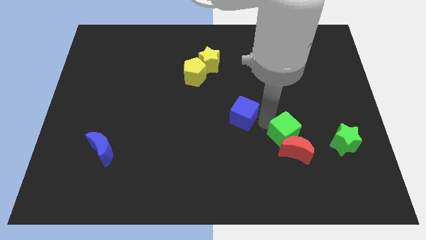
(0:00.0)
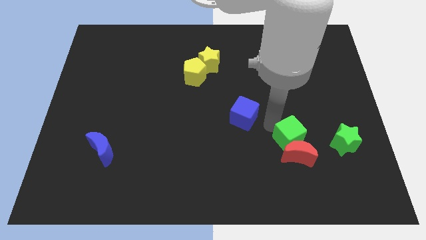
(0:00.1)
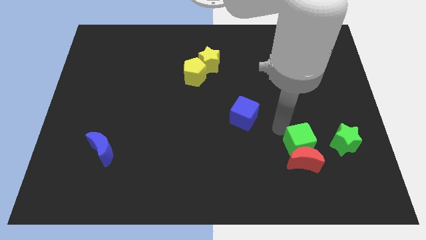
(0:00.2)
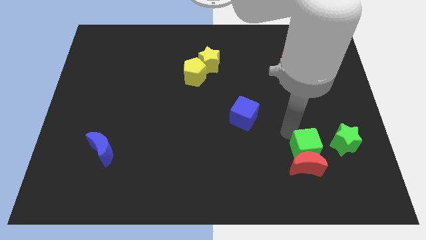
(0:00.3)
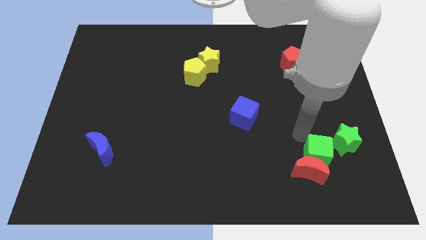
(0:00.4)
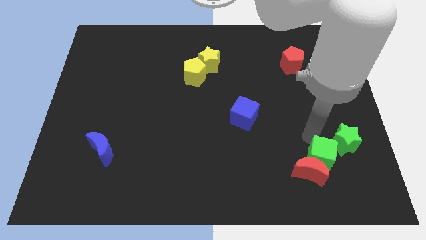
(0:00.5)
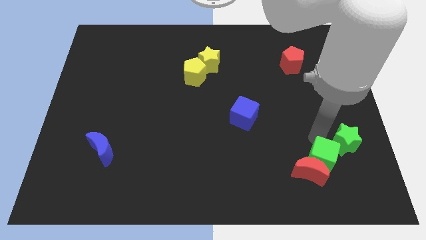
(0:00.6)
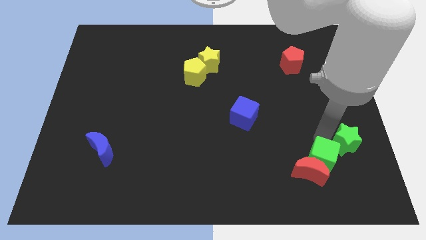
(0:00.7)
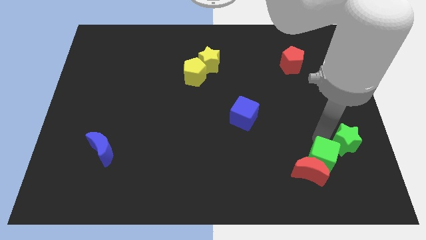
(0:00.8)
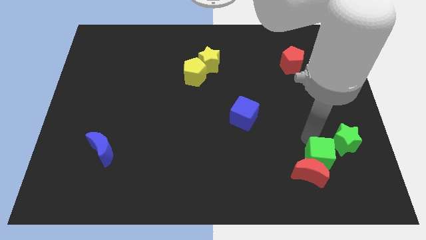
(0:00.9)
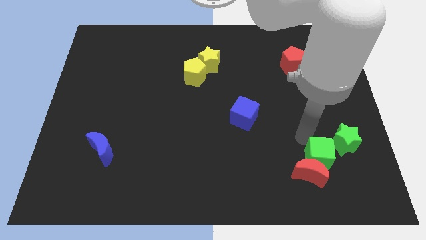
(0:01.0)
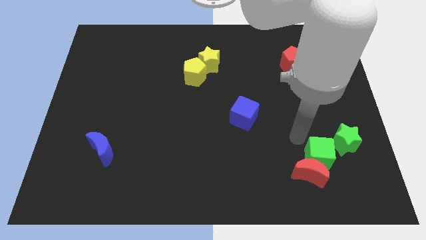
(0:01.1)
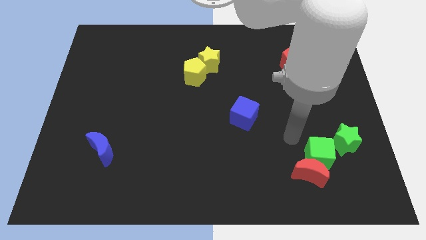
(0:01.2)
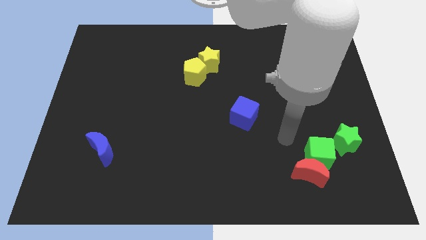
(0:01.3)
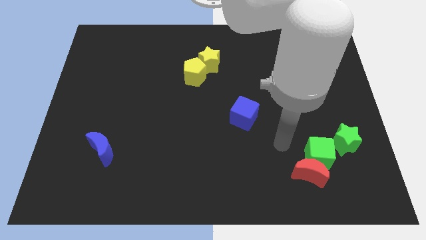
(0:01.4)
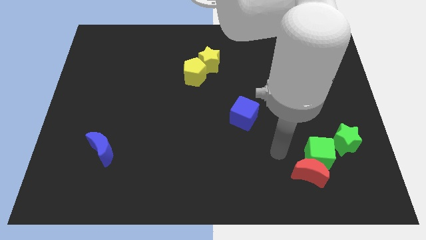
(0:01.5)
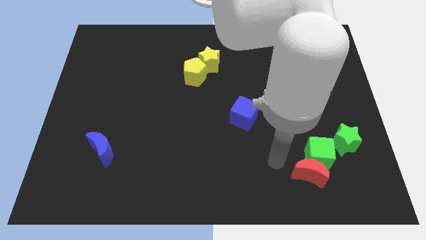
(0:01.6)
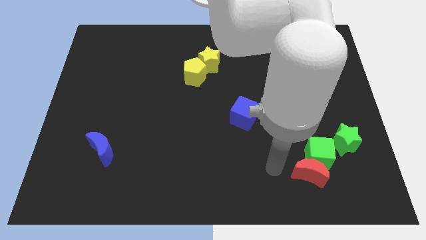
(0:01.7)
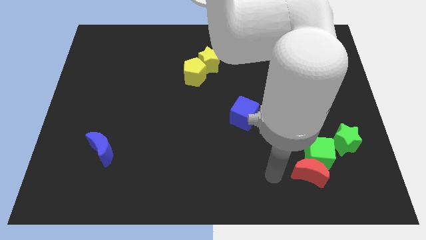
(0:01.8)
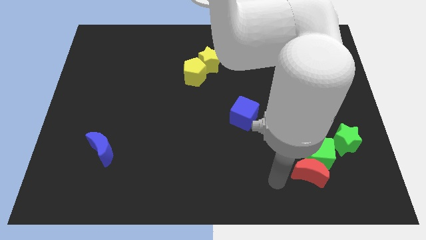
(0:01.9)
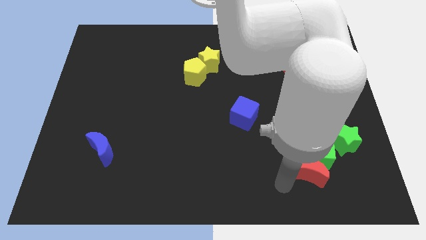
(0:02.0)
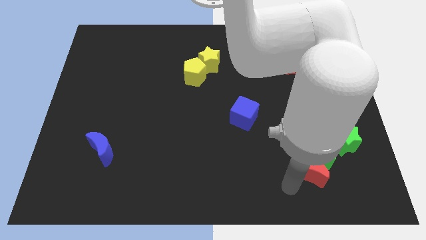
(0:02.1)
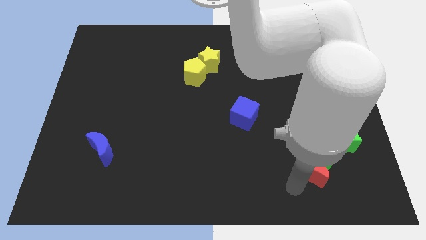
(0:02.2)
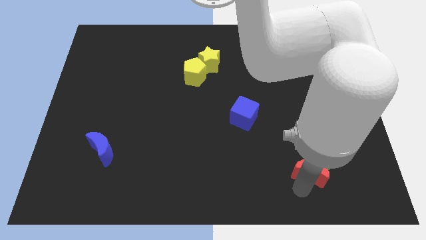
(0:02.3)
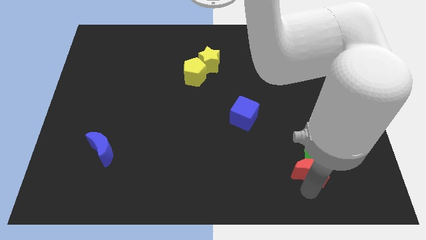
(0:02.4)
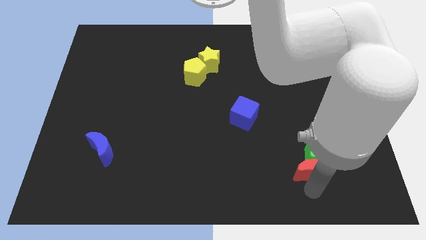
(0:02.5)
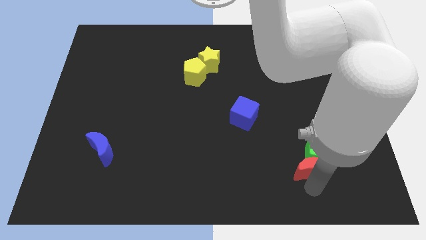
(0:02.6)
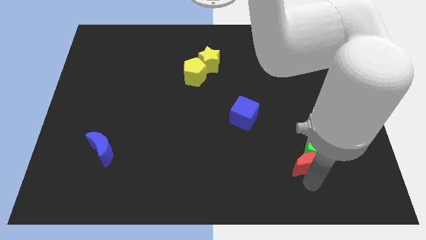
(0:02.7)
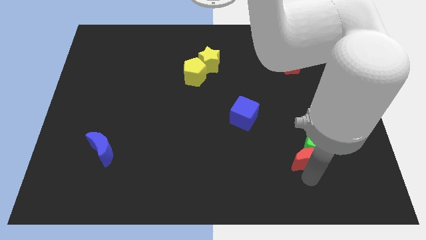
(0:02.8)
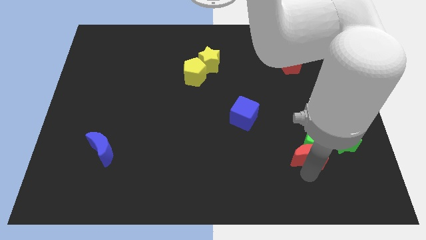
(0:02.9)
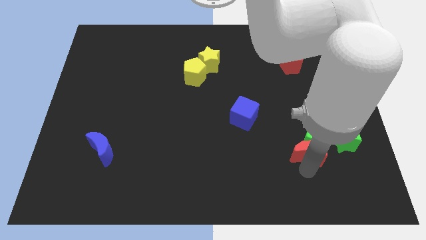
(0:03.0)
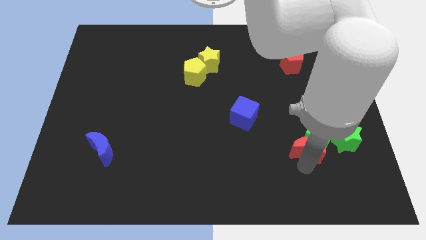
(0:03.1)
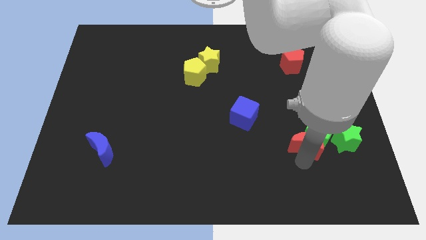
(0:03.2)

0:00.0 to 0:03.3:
put the green cube along with the red moon left to the green star

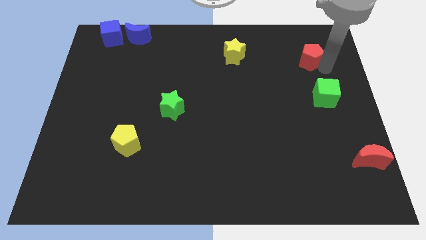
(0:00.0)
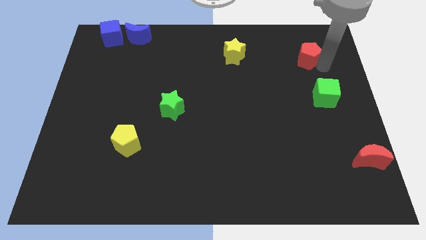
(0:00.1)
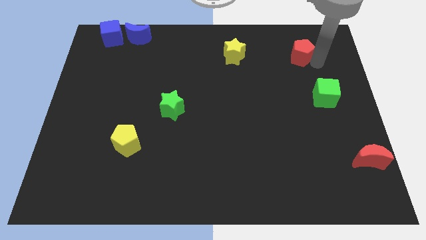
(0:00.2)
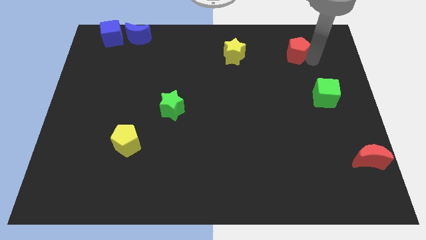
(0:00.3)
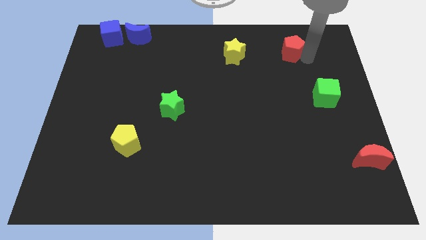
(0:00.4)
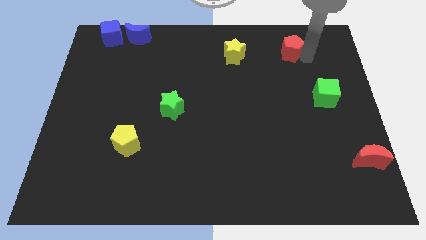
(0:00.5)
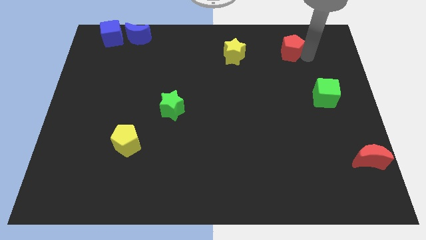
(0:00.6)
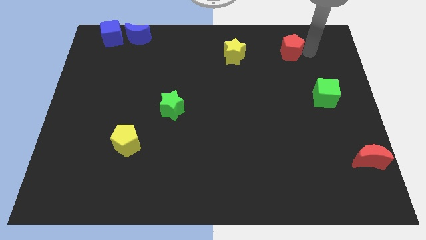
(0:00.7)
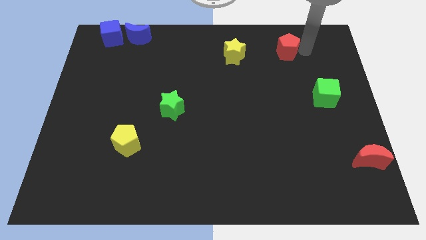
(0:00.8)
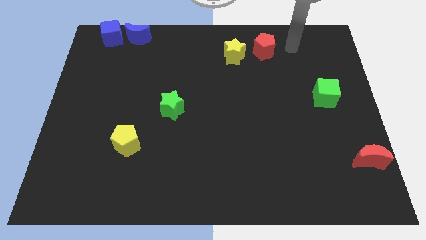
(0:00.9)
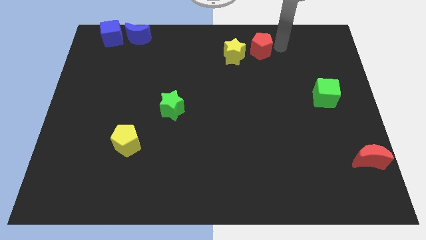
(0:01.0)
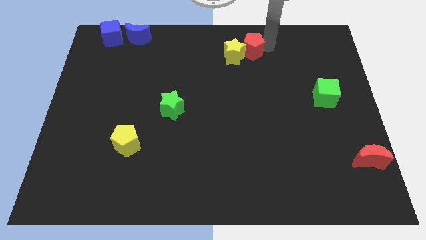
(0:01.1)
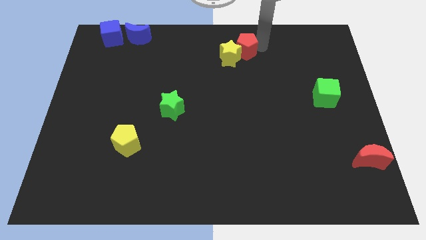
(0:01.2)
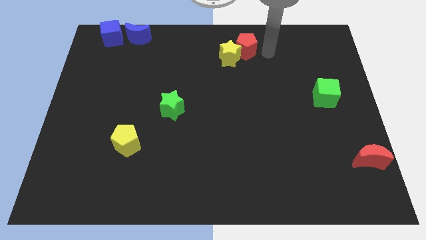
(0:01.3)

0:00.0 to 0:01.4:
place red pentagon above the yellow star

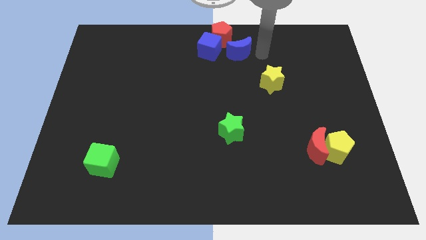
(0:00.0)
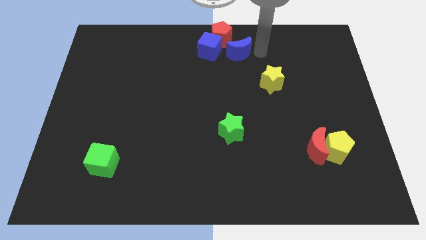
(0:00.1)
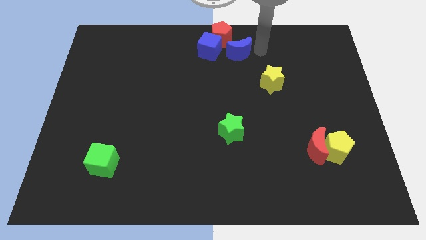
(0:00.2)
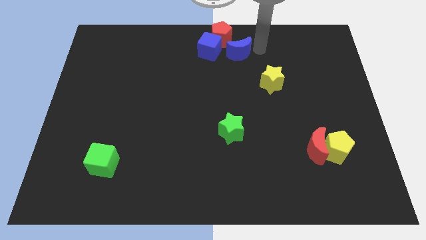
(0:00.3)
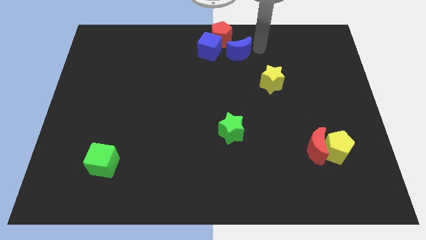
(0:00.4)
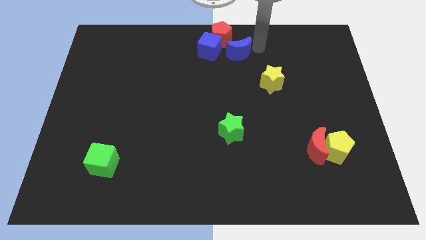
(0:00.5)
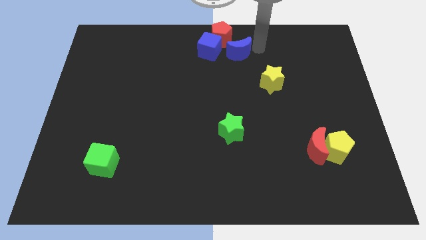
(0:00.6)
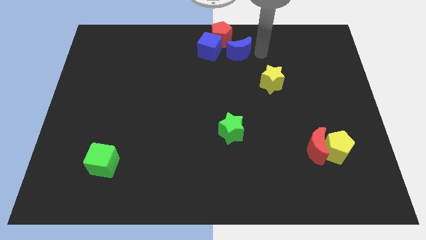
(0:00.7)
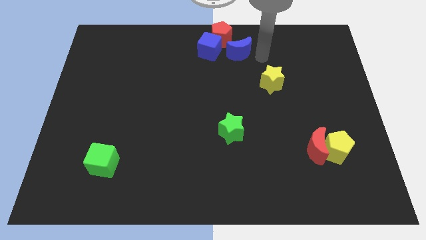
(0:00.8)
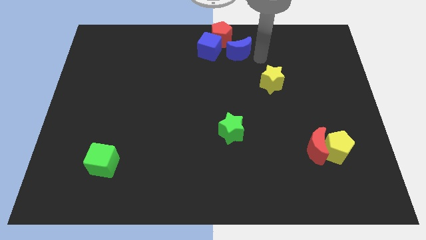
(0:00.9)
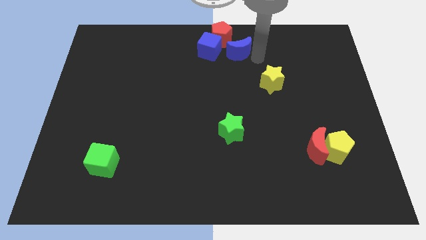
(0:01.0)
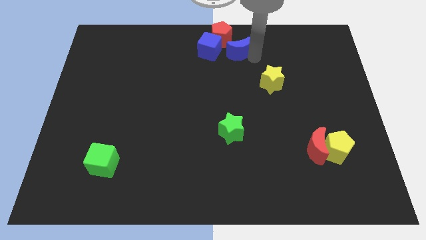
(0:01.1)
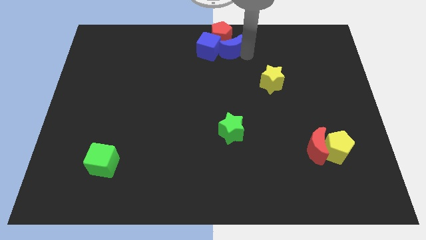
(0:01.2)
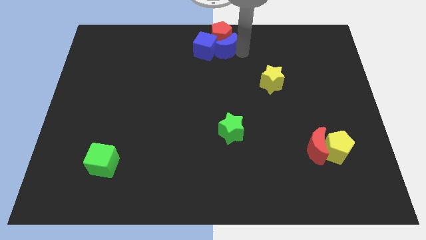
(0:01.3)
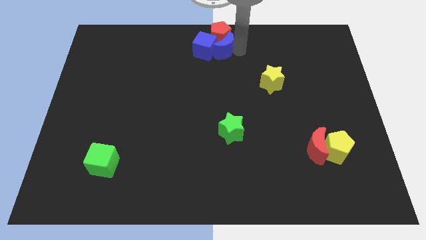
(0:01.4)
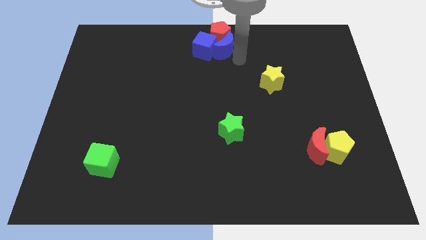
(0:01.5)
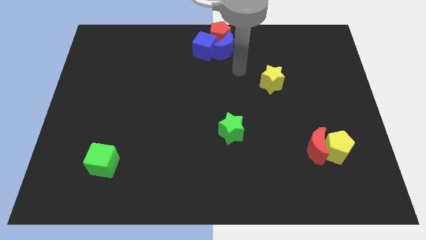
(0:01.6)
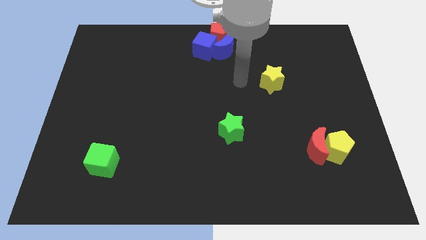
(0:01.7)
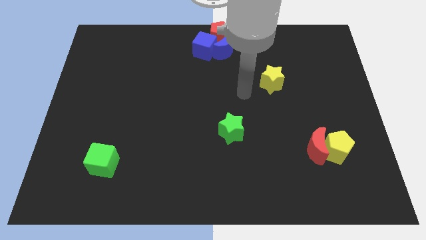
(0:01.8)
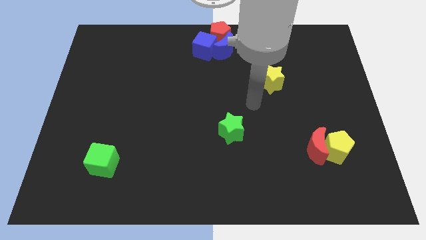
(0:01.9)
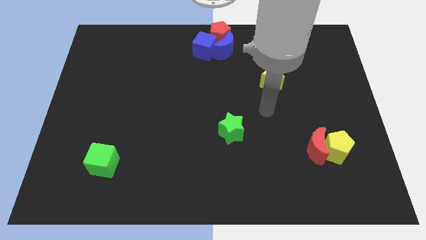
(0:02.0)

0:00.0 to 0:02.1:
add blue moon into blue cube and red pentagon

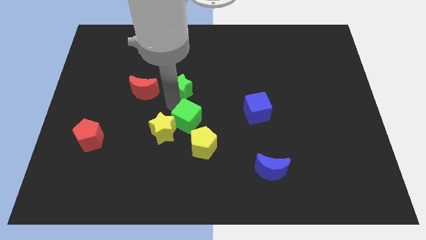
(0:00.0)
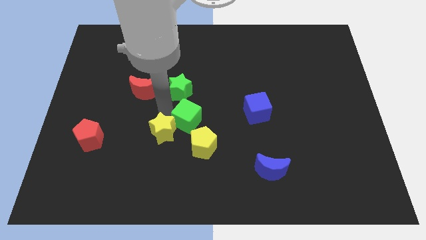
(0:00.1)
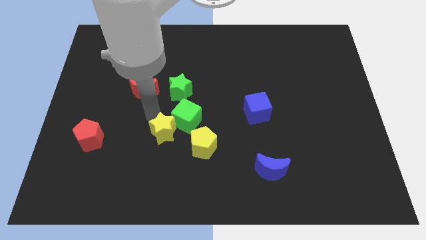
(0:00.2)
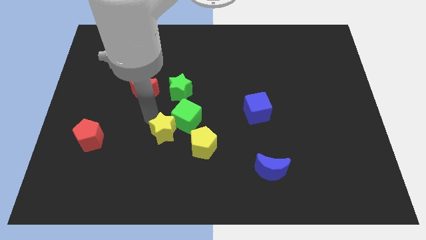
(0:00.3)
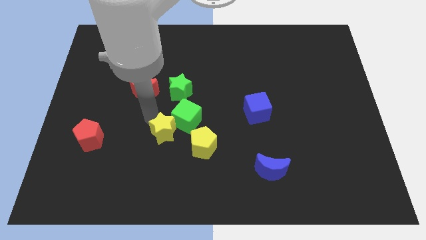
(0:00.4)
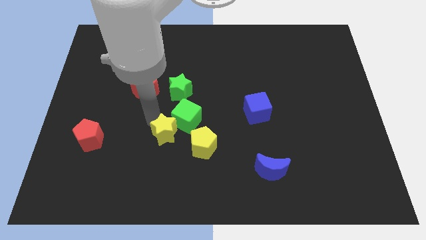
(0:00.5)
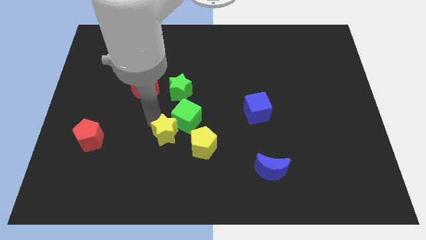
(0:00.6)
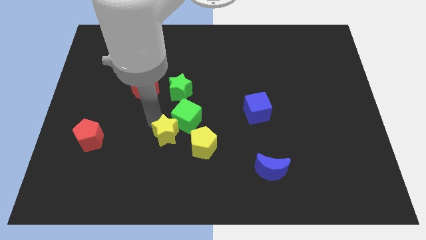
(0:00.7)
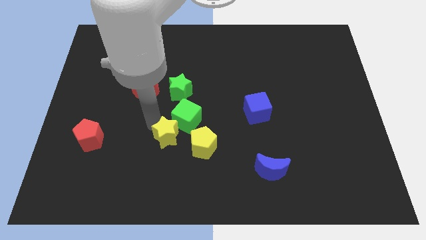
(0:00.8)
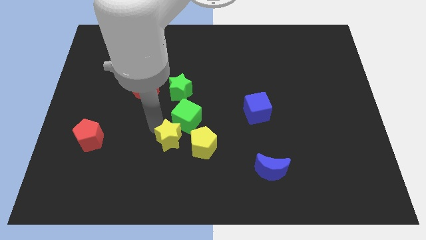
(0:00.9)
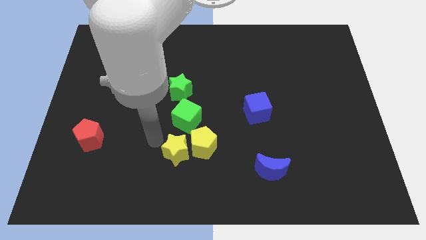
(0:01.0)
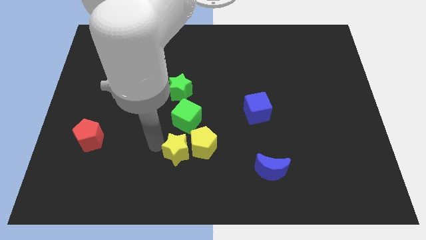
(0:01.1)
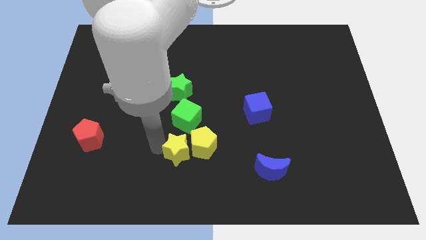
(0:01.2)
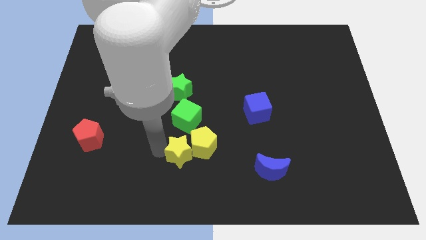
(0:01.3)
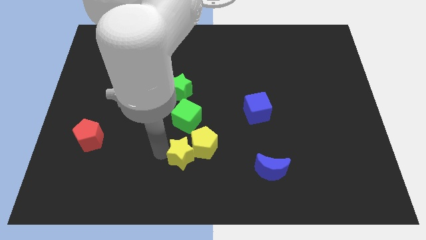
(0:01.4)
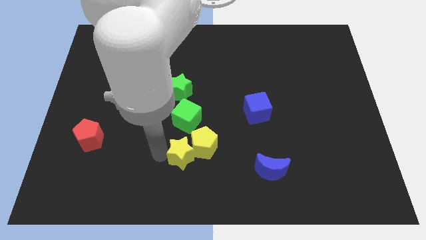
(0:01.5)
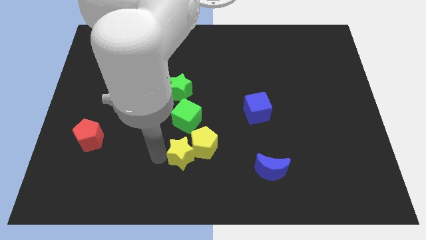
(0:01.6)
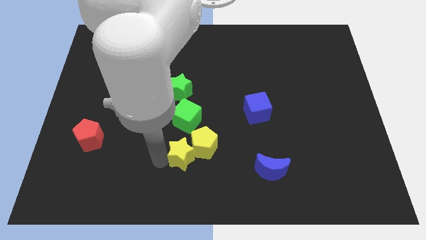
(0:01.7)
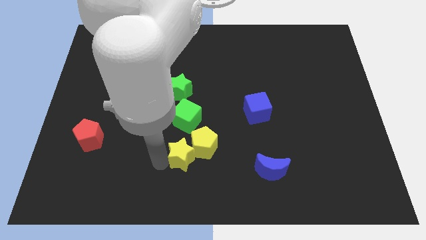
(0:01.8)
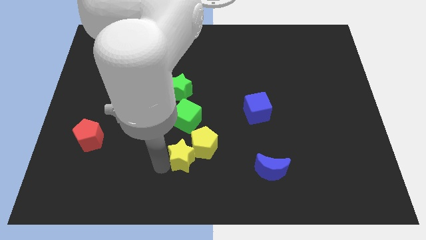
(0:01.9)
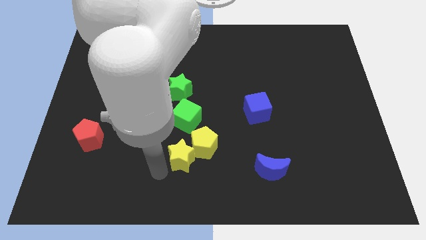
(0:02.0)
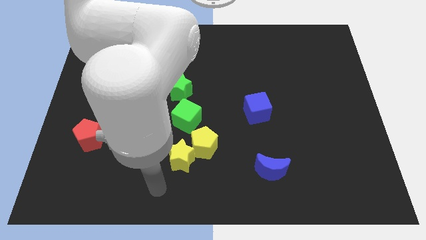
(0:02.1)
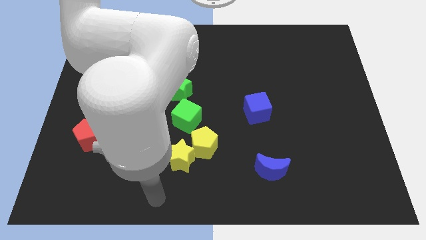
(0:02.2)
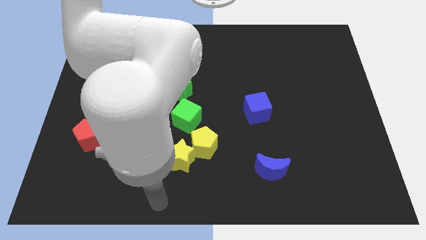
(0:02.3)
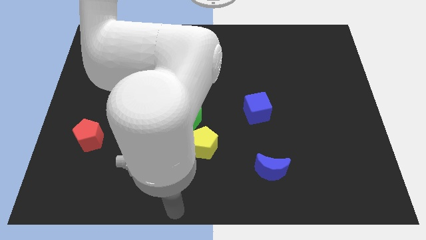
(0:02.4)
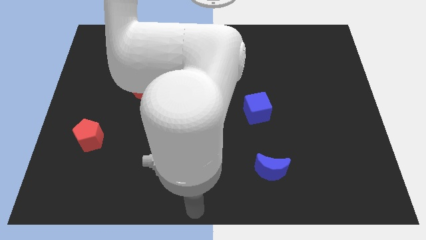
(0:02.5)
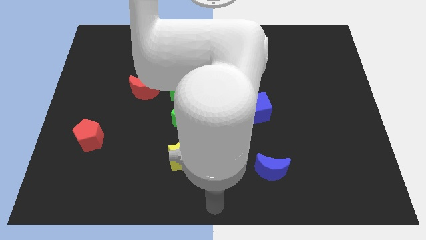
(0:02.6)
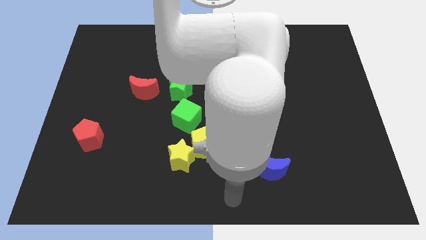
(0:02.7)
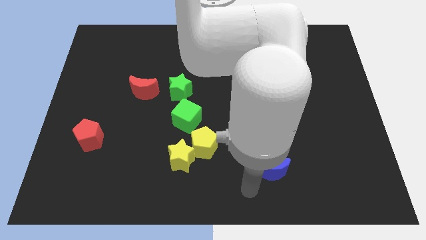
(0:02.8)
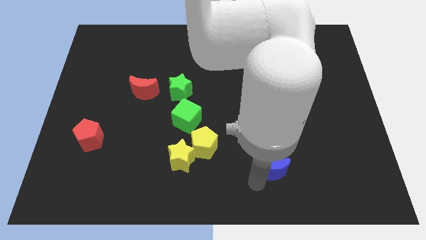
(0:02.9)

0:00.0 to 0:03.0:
move the yellow star diagonally to the left bottom of the yellow pentagon
